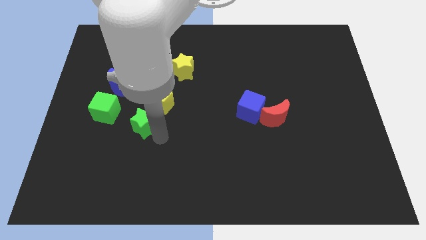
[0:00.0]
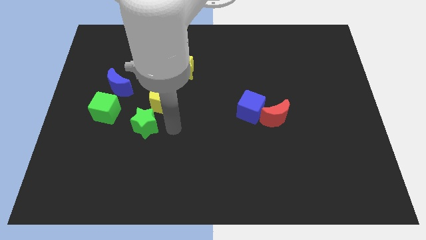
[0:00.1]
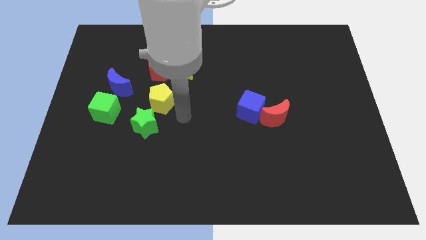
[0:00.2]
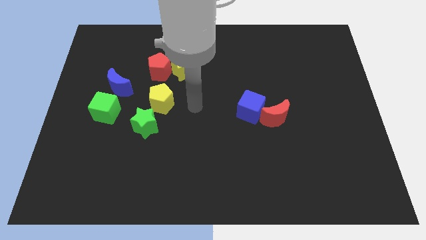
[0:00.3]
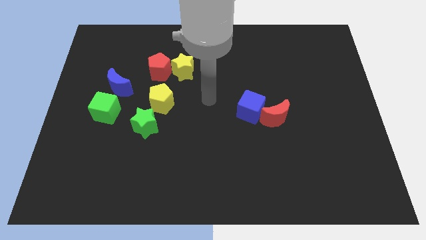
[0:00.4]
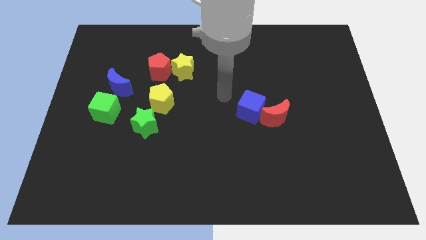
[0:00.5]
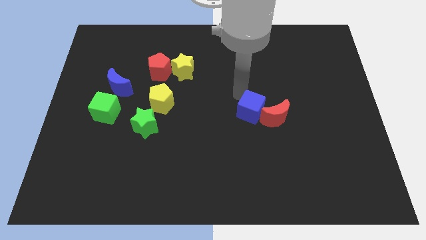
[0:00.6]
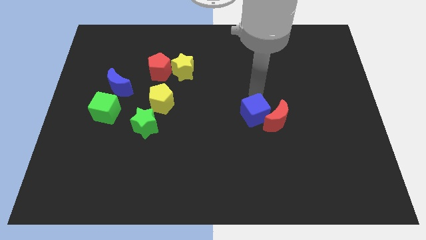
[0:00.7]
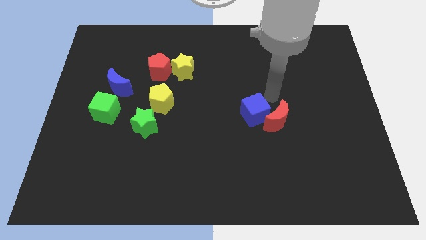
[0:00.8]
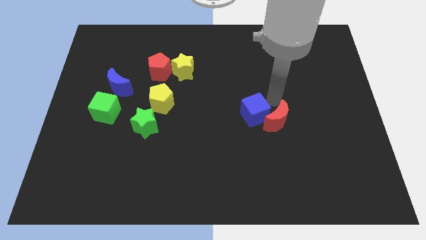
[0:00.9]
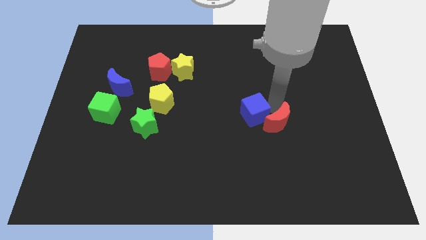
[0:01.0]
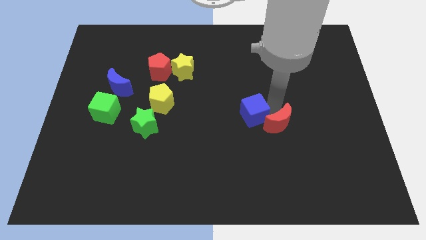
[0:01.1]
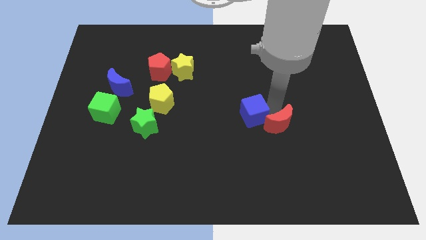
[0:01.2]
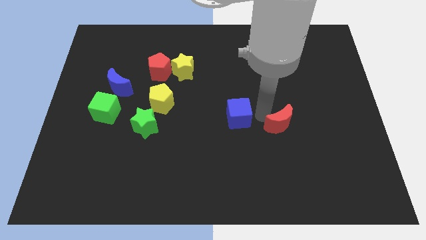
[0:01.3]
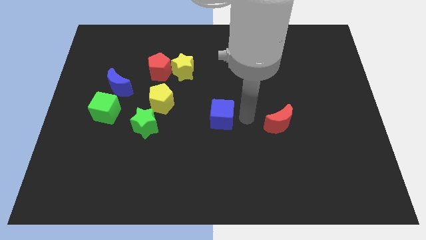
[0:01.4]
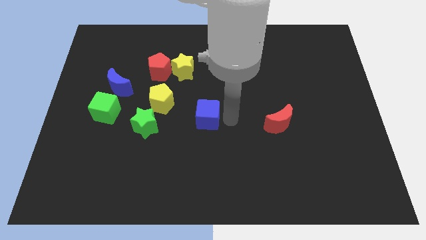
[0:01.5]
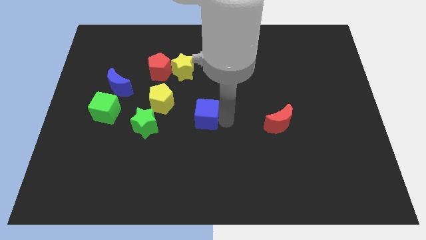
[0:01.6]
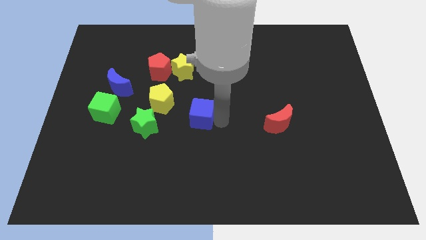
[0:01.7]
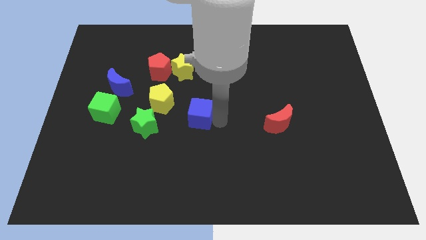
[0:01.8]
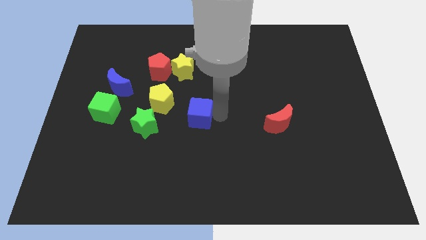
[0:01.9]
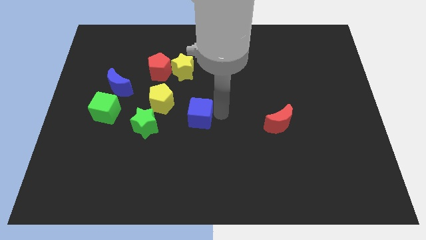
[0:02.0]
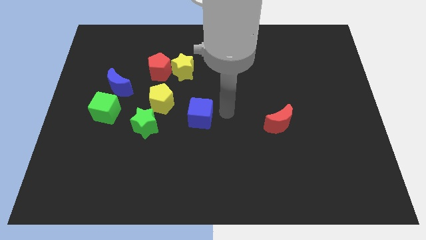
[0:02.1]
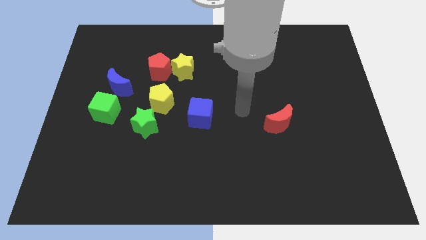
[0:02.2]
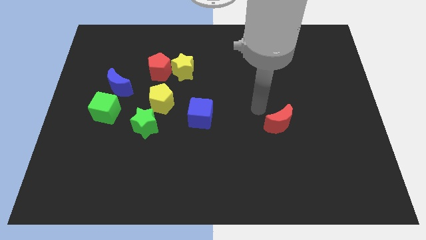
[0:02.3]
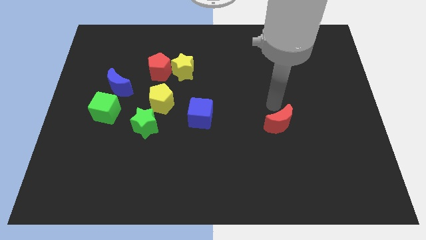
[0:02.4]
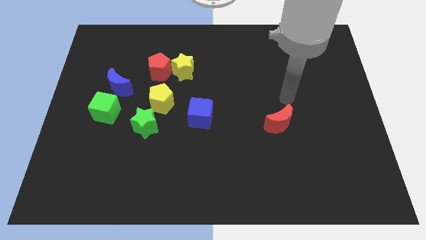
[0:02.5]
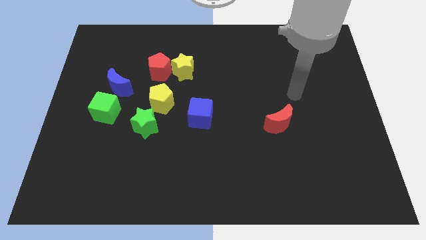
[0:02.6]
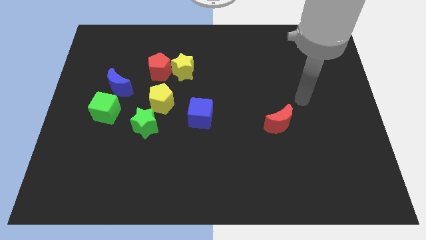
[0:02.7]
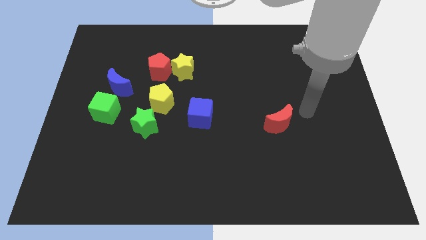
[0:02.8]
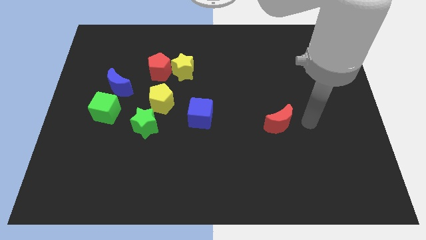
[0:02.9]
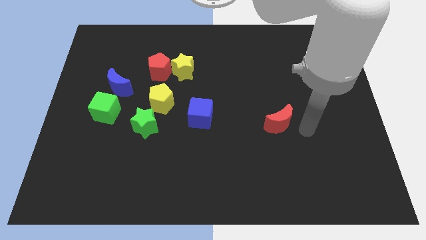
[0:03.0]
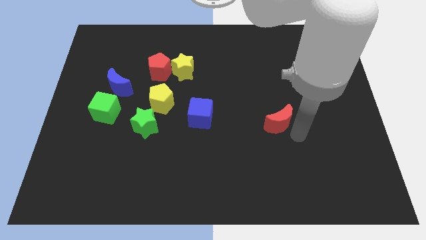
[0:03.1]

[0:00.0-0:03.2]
move the blue cube away from the red moon

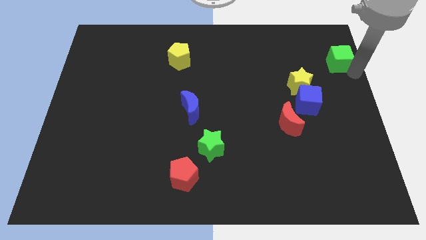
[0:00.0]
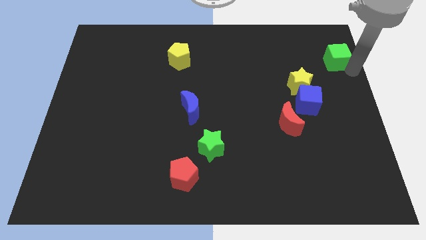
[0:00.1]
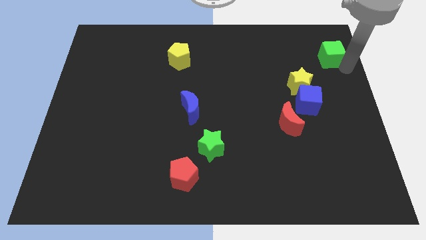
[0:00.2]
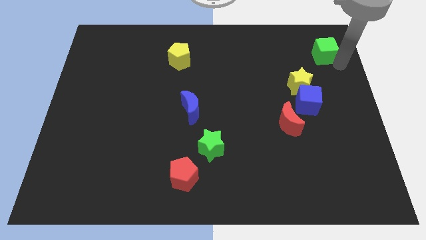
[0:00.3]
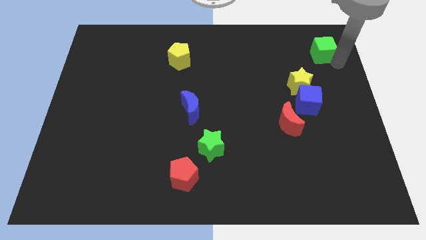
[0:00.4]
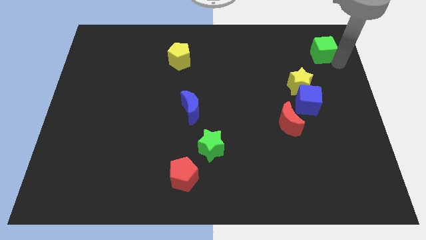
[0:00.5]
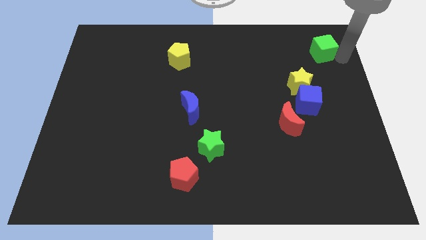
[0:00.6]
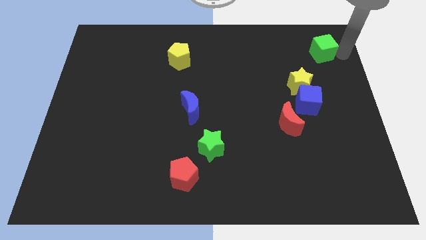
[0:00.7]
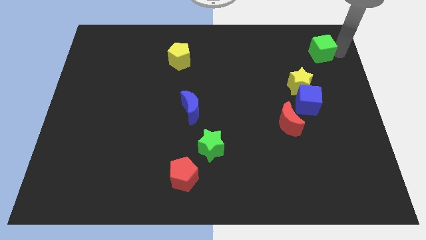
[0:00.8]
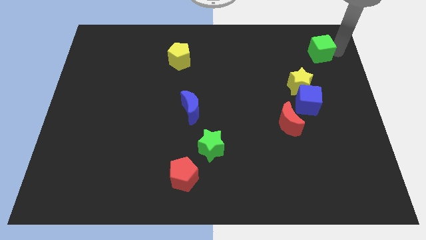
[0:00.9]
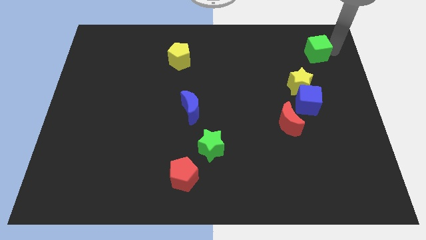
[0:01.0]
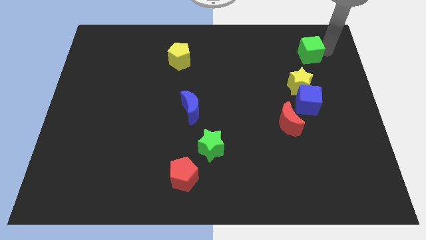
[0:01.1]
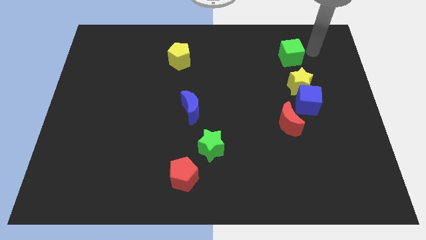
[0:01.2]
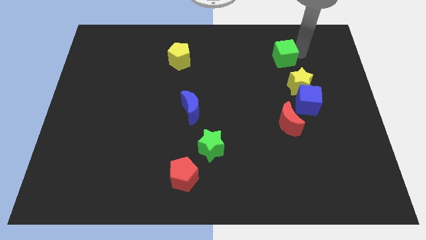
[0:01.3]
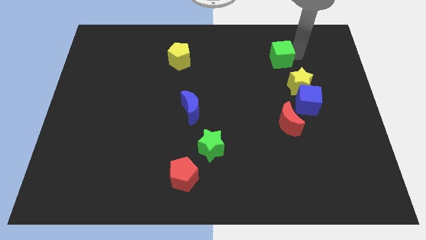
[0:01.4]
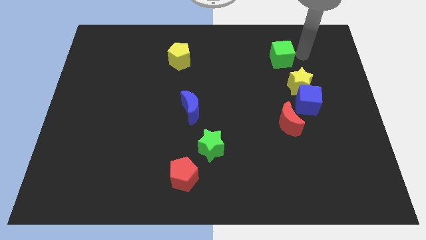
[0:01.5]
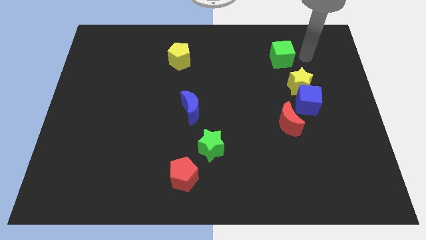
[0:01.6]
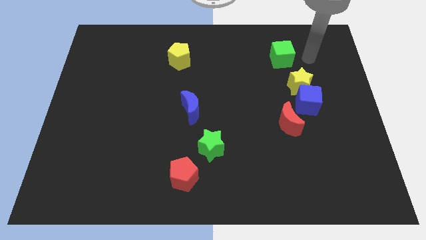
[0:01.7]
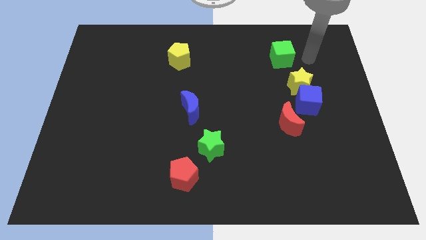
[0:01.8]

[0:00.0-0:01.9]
place the green cube above the yellow star

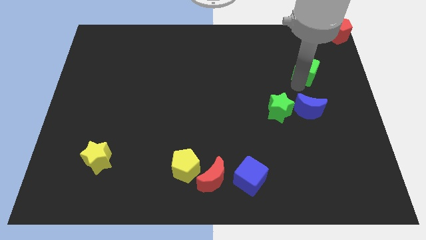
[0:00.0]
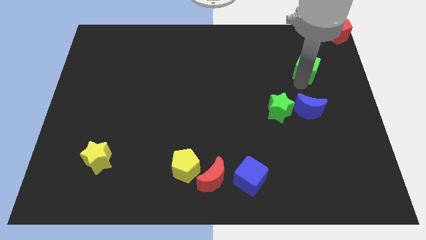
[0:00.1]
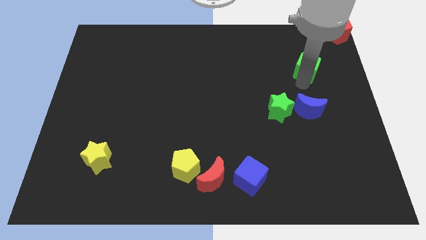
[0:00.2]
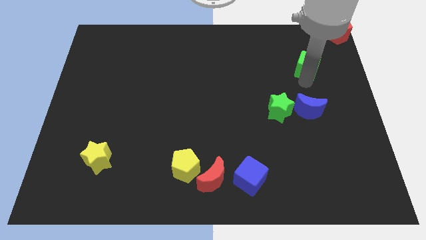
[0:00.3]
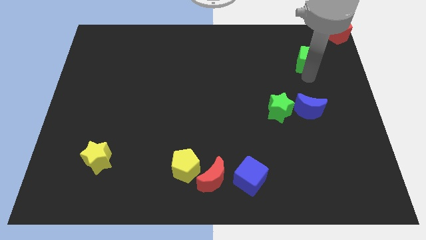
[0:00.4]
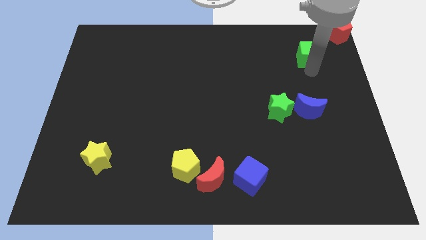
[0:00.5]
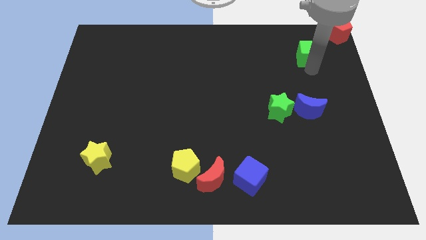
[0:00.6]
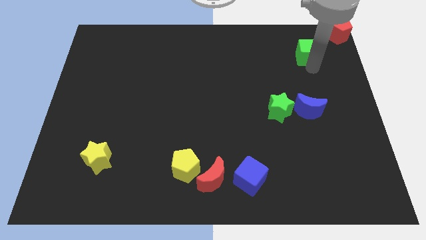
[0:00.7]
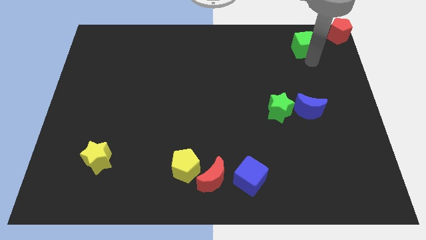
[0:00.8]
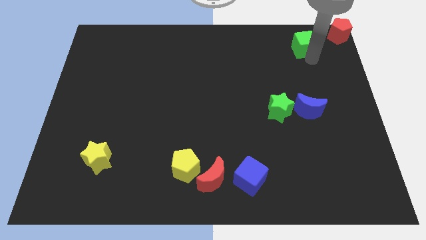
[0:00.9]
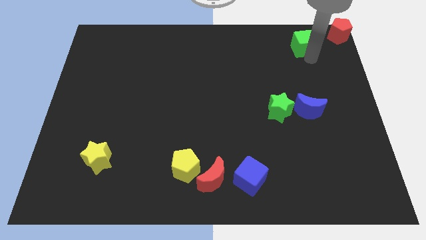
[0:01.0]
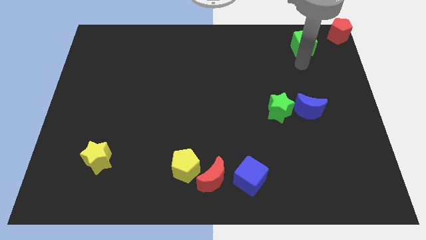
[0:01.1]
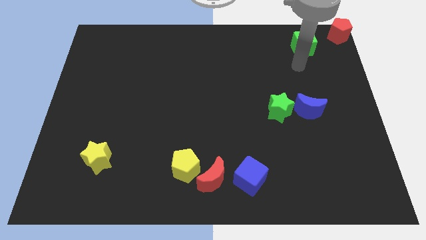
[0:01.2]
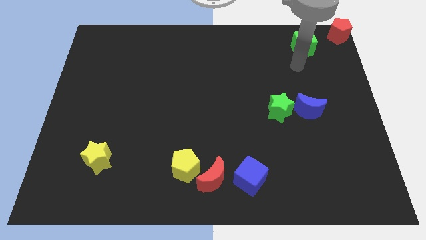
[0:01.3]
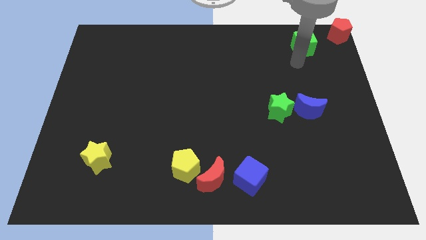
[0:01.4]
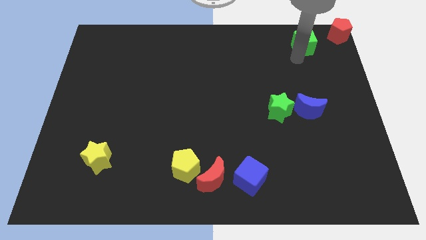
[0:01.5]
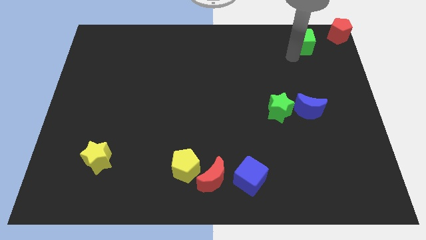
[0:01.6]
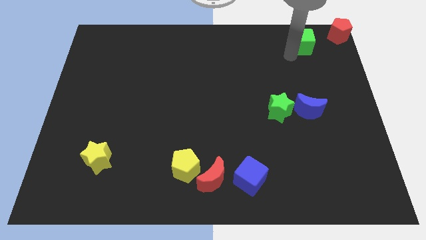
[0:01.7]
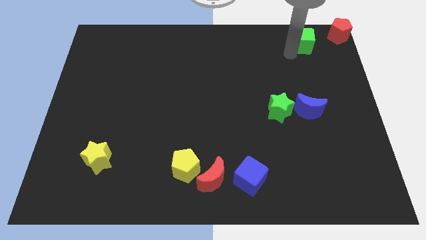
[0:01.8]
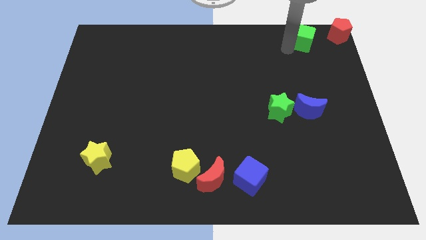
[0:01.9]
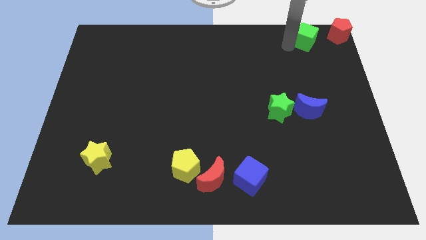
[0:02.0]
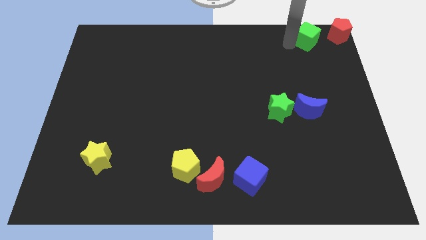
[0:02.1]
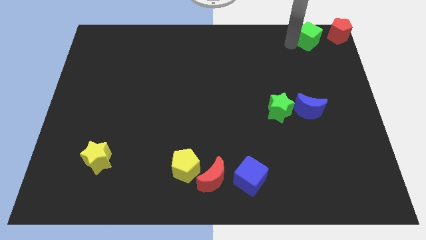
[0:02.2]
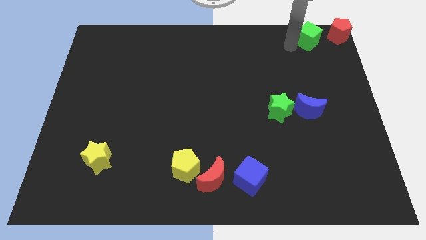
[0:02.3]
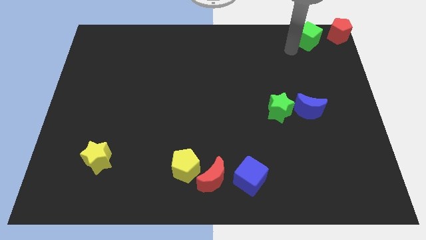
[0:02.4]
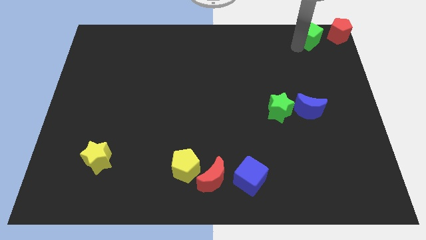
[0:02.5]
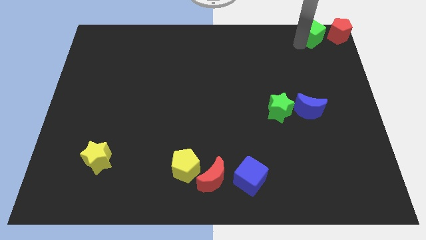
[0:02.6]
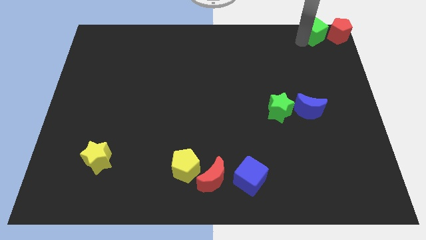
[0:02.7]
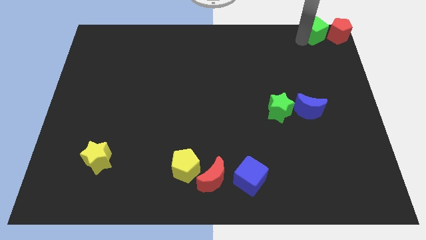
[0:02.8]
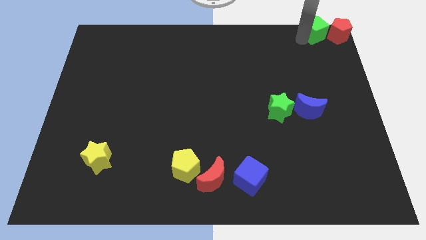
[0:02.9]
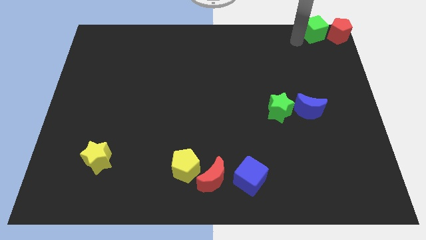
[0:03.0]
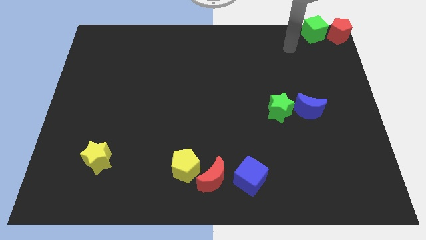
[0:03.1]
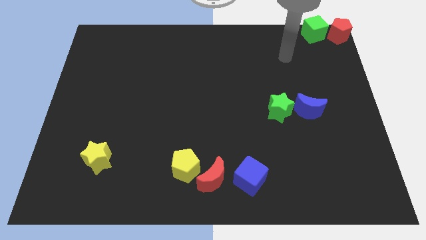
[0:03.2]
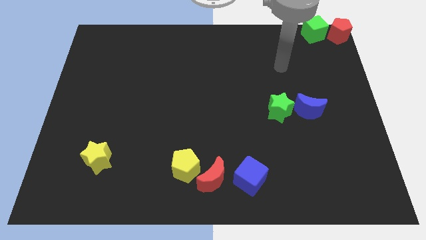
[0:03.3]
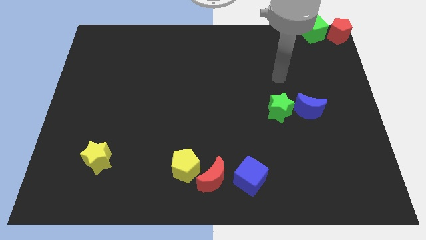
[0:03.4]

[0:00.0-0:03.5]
place the green cube to the left of the red pentagon

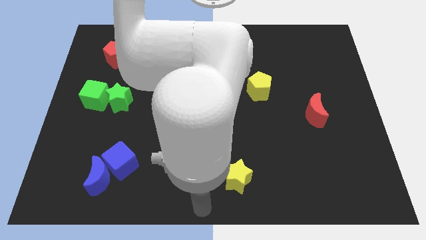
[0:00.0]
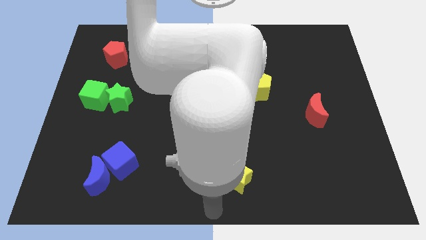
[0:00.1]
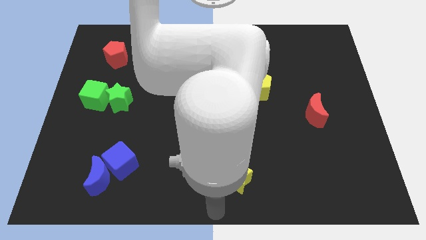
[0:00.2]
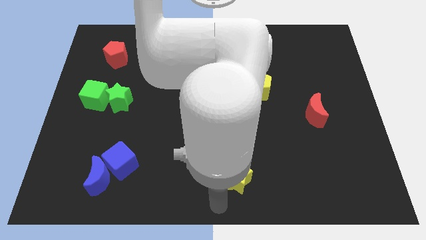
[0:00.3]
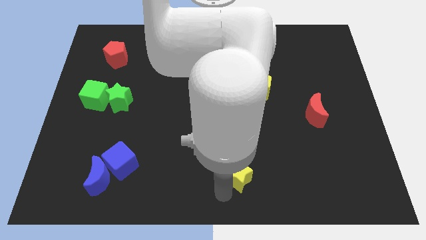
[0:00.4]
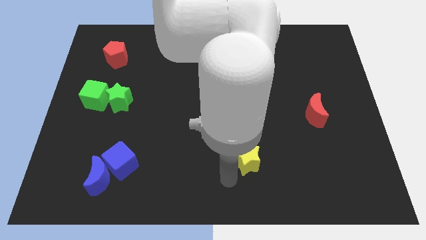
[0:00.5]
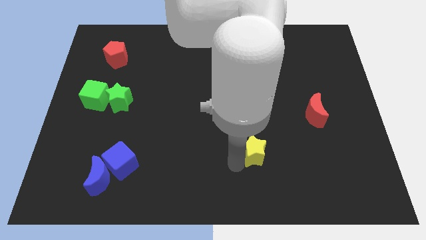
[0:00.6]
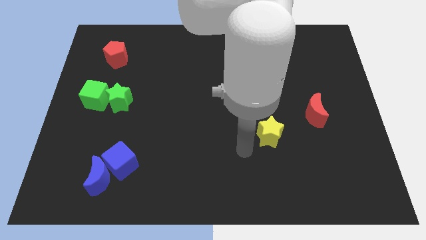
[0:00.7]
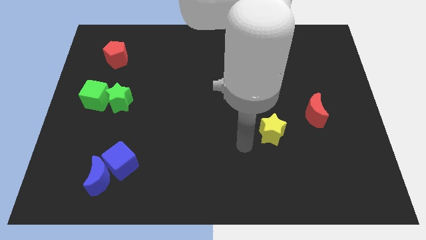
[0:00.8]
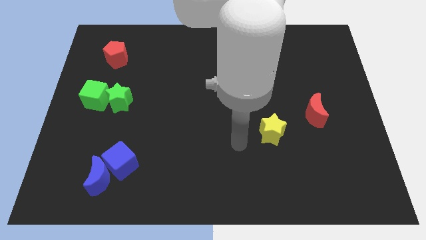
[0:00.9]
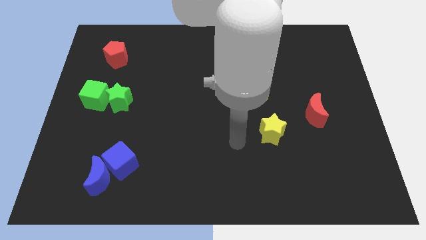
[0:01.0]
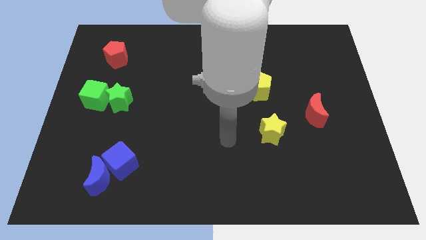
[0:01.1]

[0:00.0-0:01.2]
slightly push the yellow star upwards
